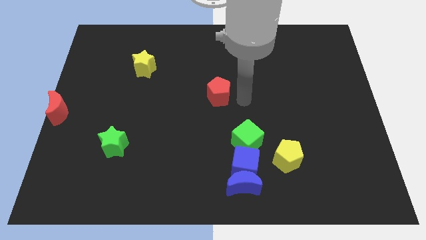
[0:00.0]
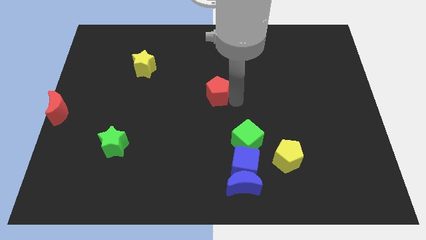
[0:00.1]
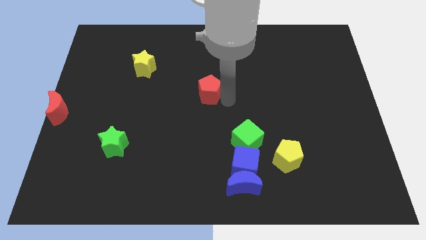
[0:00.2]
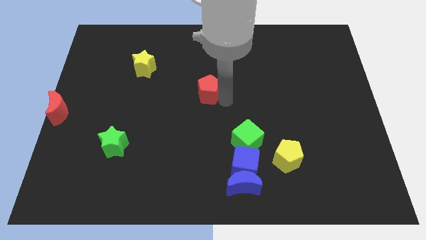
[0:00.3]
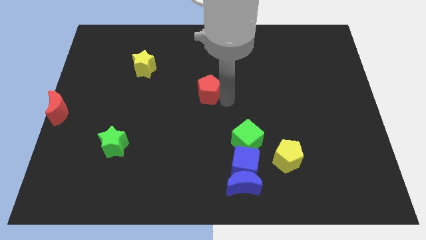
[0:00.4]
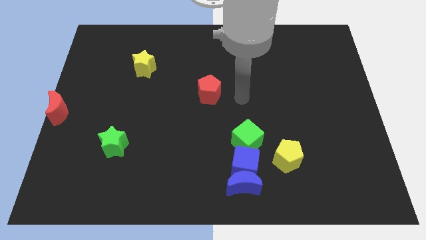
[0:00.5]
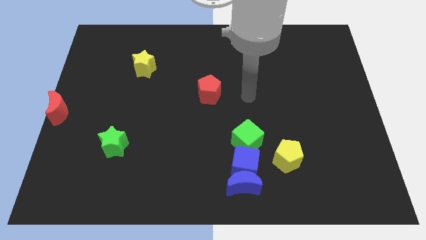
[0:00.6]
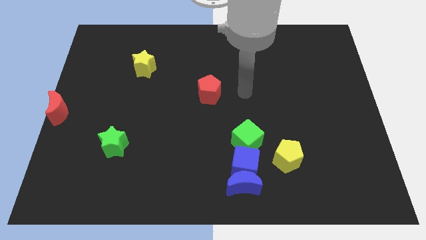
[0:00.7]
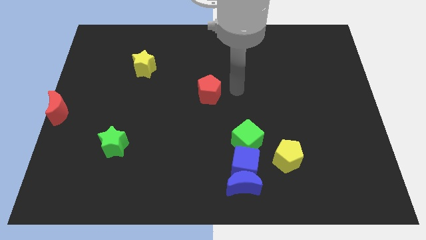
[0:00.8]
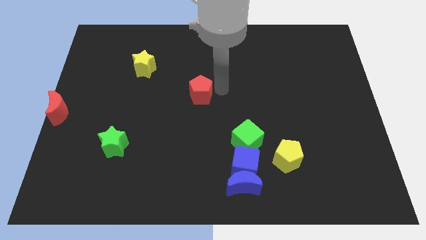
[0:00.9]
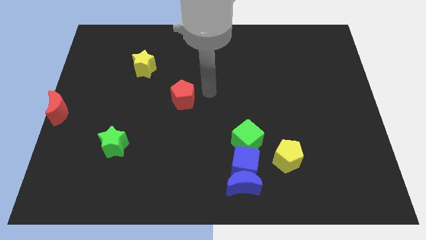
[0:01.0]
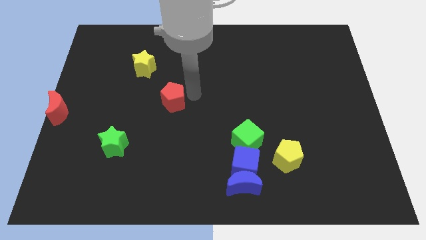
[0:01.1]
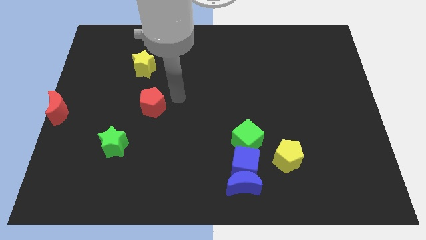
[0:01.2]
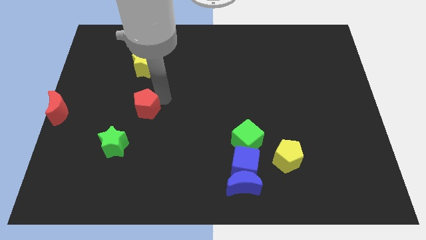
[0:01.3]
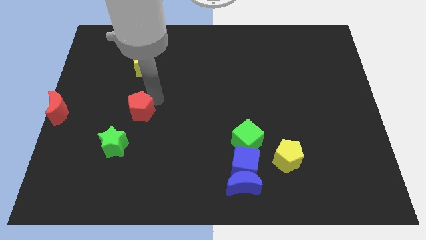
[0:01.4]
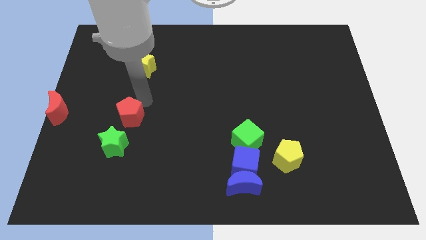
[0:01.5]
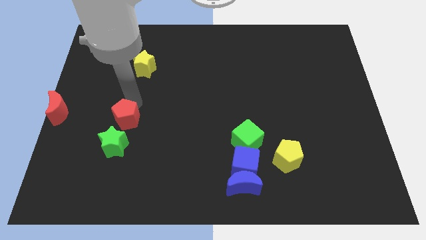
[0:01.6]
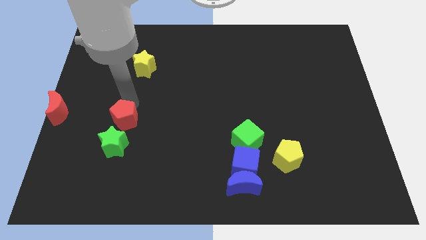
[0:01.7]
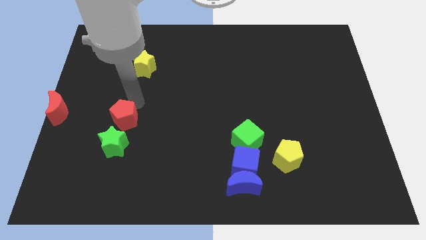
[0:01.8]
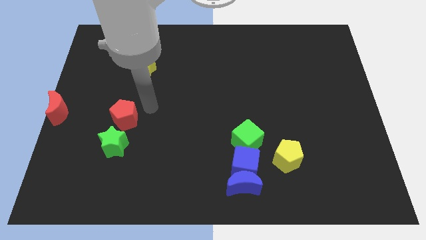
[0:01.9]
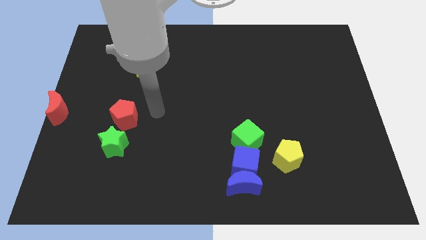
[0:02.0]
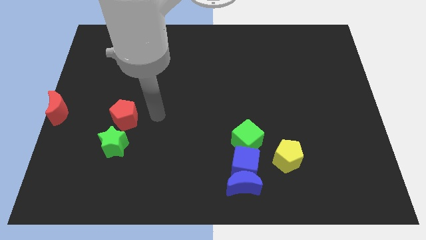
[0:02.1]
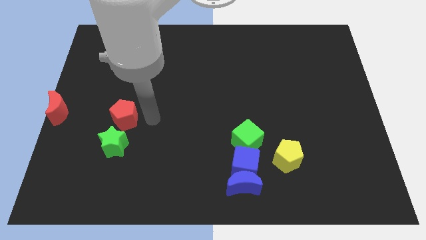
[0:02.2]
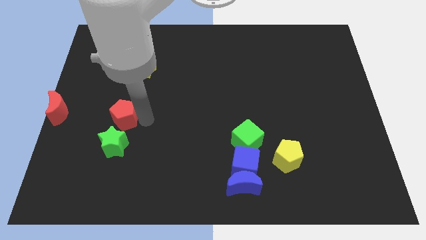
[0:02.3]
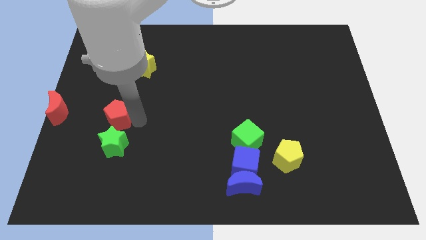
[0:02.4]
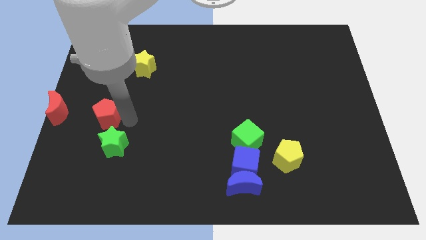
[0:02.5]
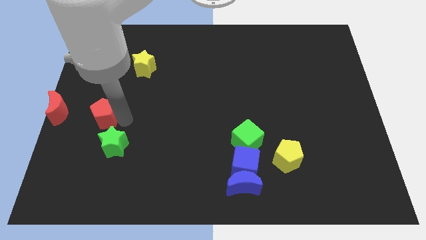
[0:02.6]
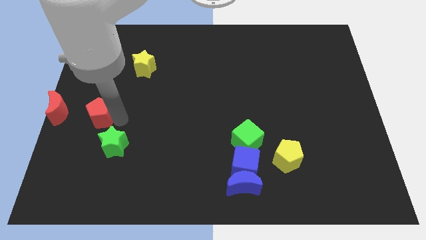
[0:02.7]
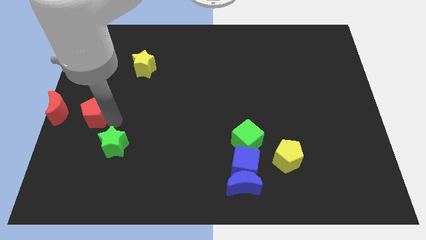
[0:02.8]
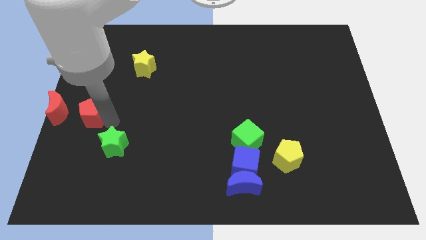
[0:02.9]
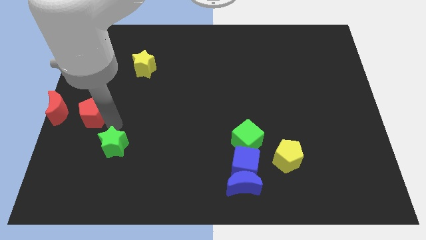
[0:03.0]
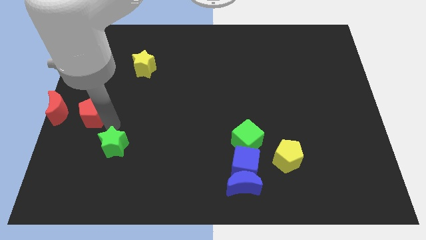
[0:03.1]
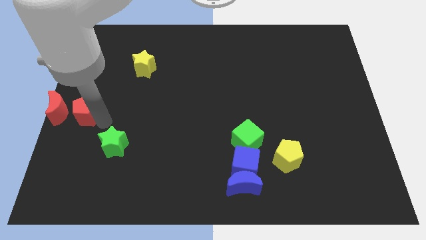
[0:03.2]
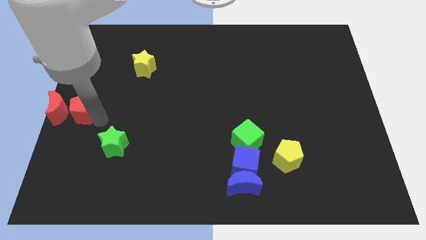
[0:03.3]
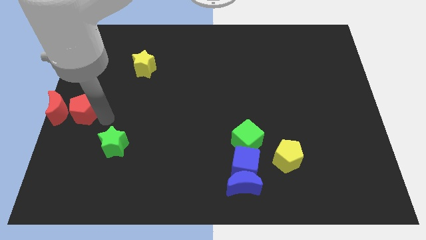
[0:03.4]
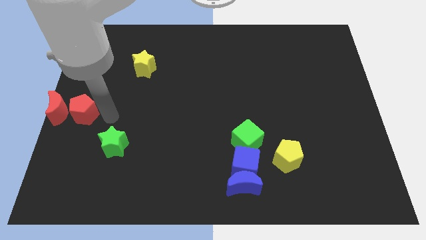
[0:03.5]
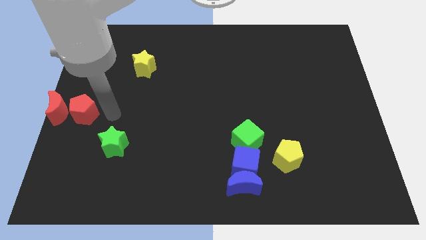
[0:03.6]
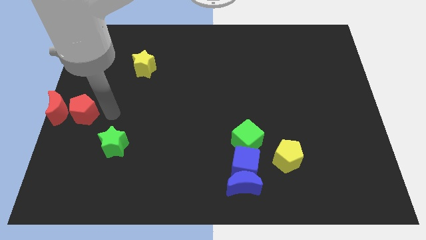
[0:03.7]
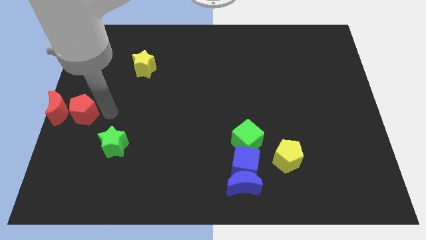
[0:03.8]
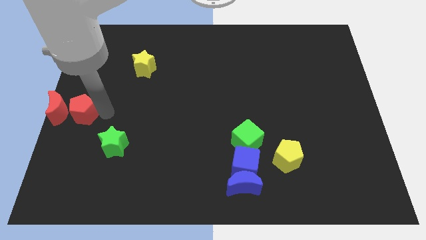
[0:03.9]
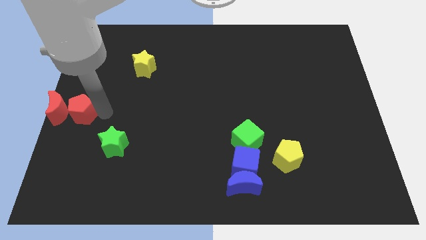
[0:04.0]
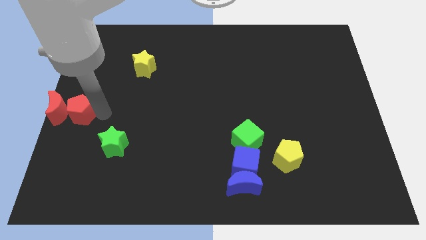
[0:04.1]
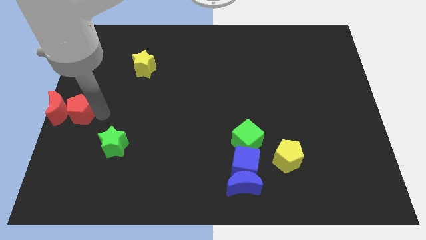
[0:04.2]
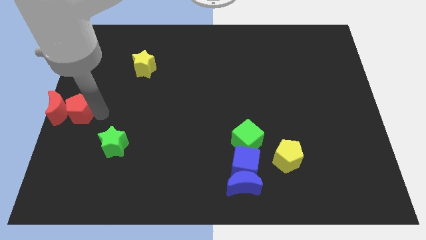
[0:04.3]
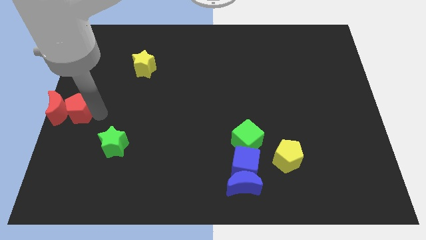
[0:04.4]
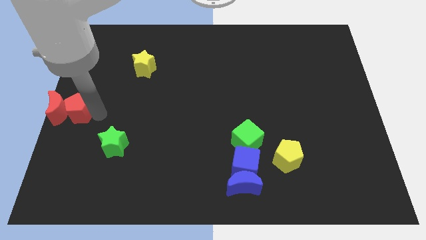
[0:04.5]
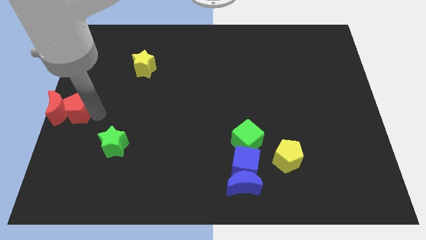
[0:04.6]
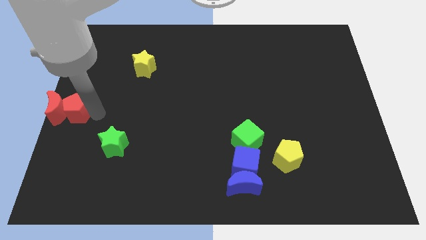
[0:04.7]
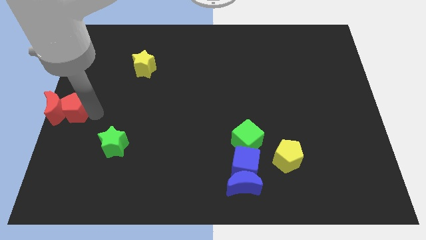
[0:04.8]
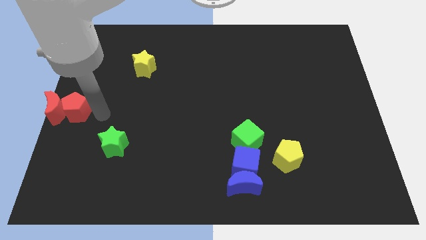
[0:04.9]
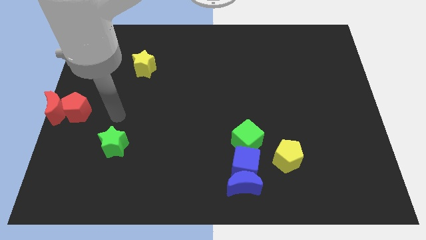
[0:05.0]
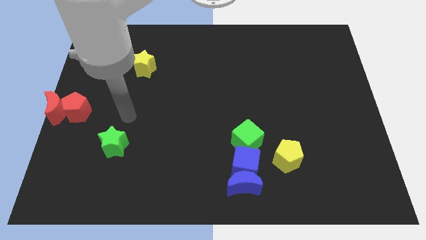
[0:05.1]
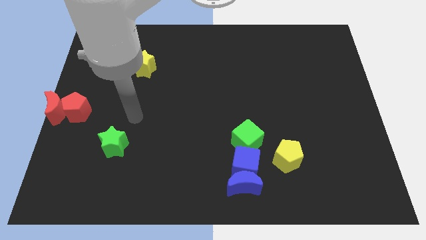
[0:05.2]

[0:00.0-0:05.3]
move the red pentagon into the red moon

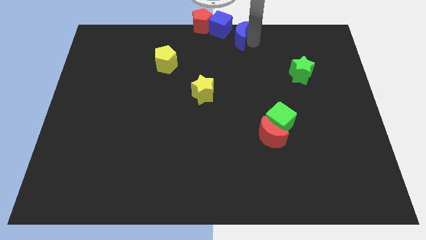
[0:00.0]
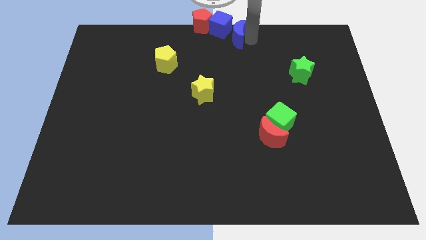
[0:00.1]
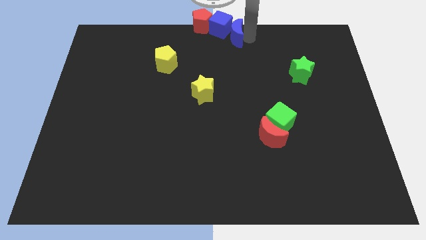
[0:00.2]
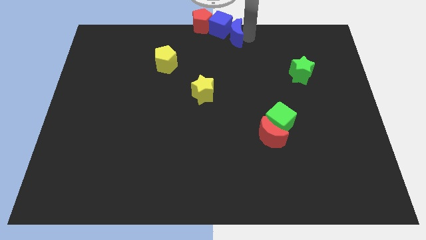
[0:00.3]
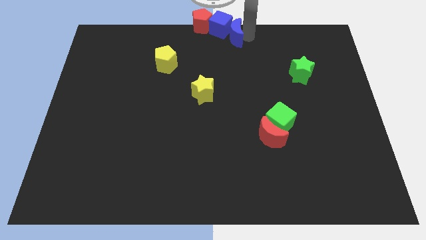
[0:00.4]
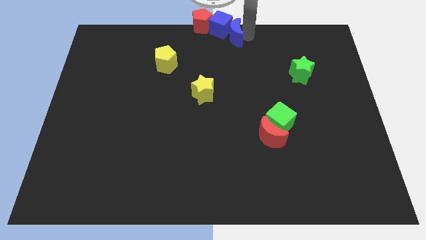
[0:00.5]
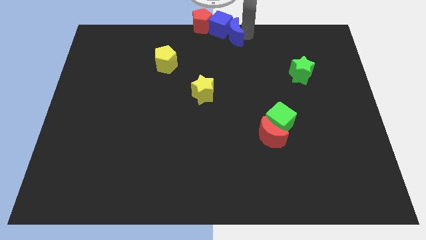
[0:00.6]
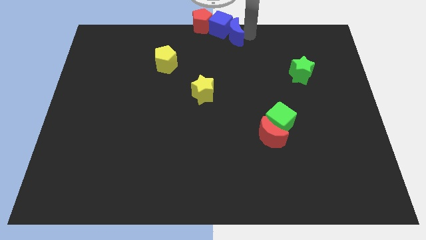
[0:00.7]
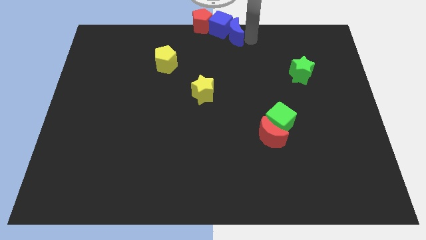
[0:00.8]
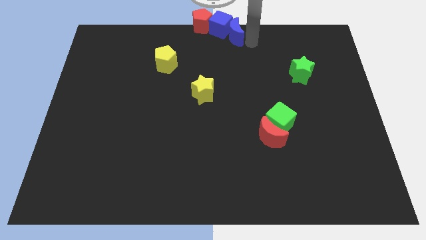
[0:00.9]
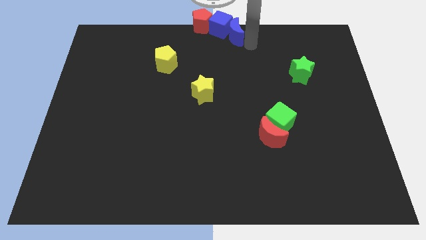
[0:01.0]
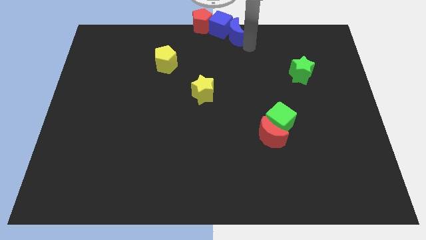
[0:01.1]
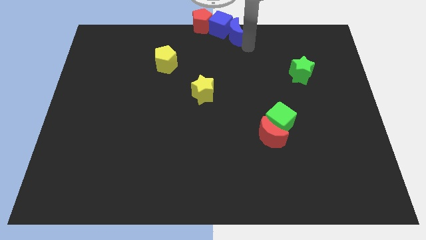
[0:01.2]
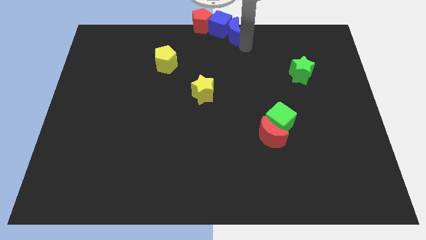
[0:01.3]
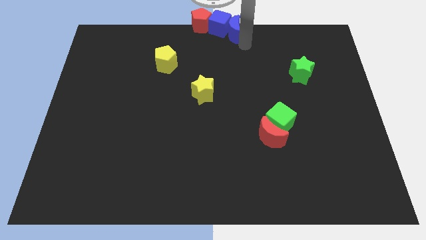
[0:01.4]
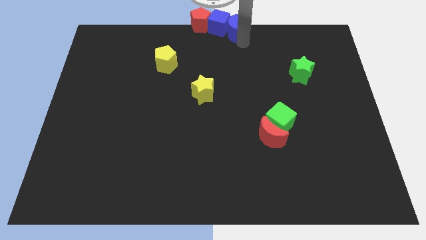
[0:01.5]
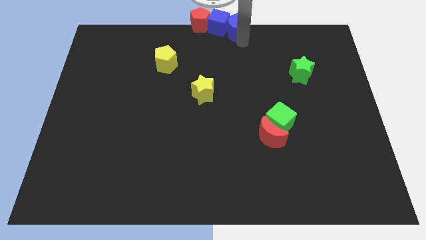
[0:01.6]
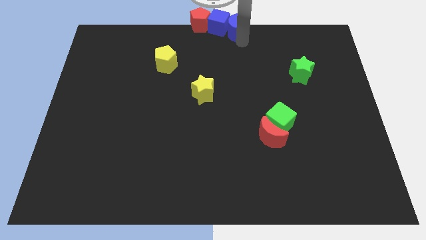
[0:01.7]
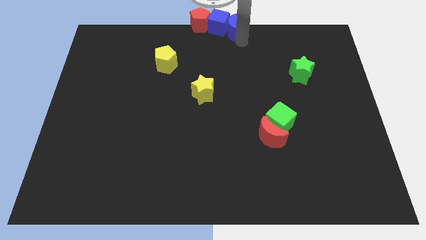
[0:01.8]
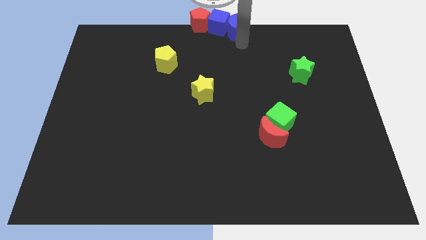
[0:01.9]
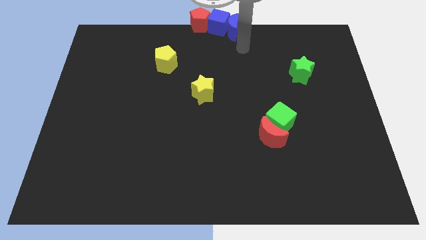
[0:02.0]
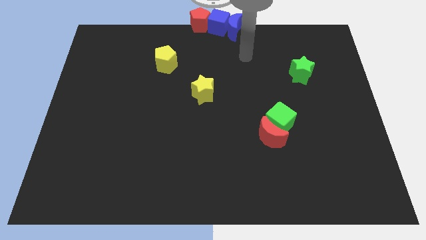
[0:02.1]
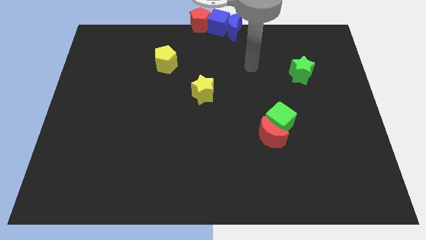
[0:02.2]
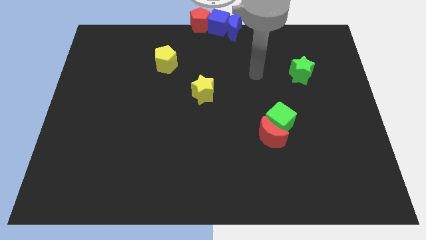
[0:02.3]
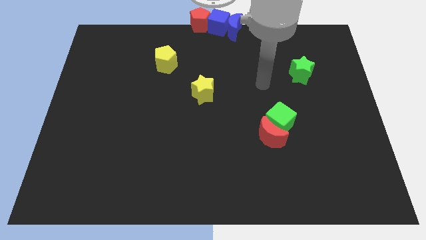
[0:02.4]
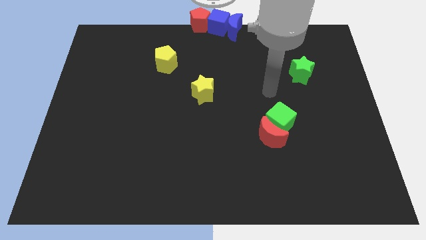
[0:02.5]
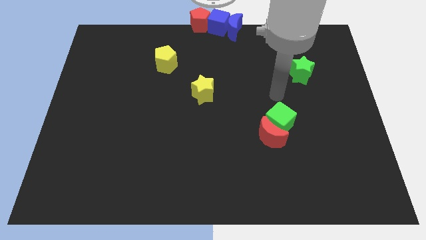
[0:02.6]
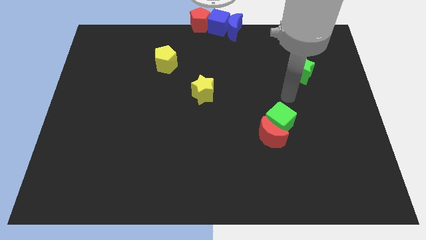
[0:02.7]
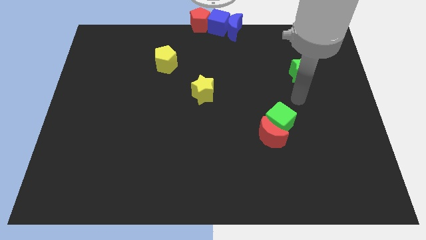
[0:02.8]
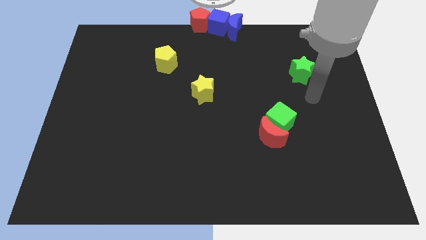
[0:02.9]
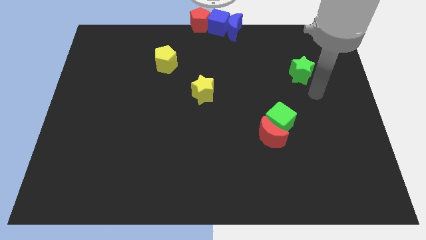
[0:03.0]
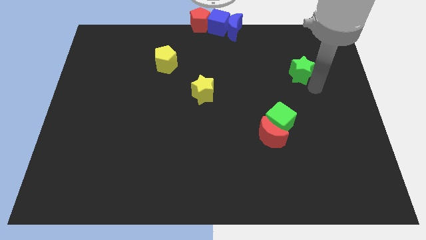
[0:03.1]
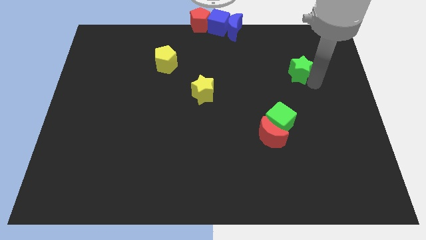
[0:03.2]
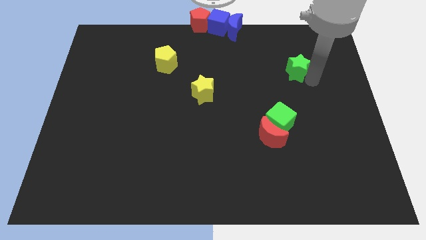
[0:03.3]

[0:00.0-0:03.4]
push the blue moon into the blue cube

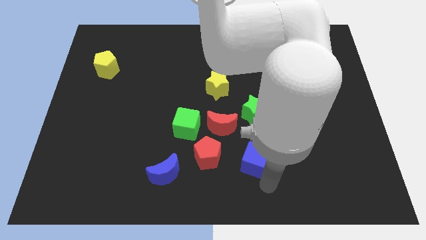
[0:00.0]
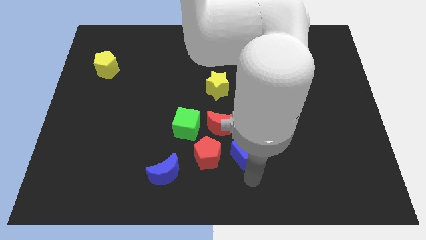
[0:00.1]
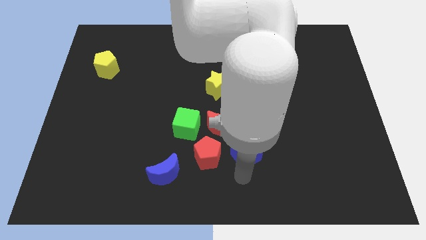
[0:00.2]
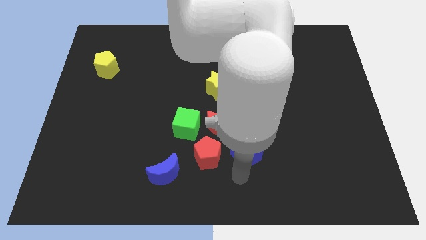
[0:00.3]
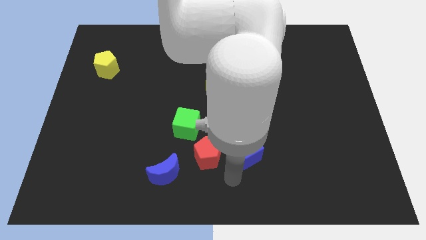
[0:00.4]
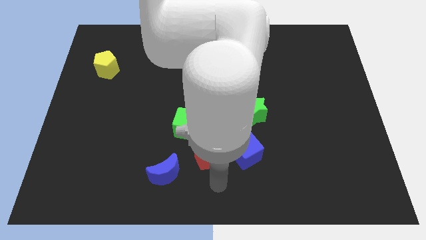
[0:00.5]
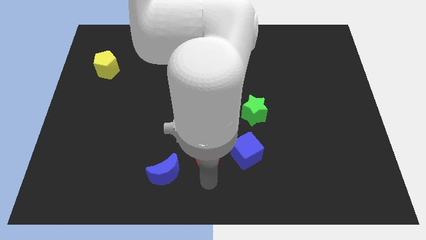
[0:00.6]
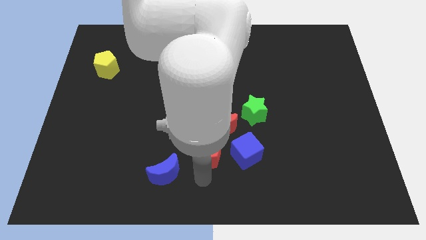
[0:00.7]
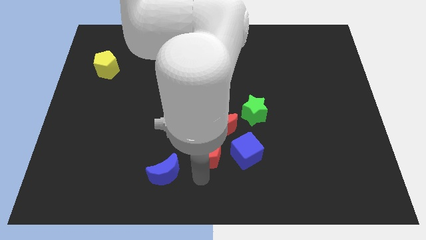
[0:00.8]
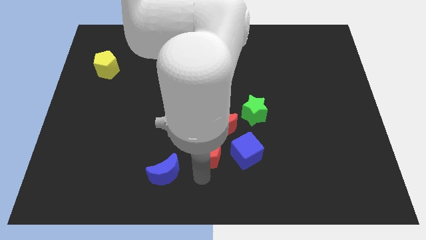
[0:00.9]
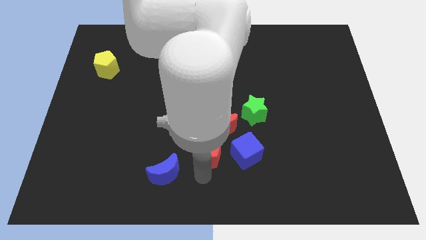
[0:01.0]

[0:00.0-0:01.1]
slightly push blue cube upwards
